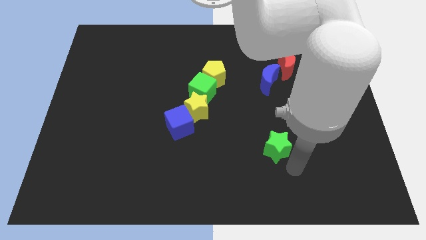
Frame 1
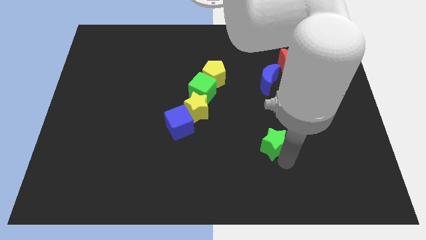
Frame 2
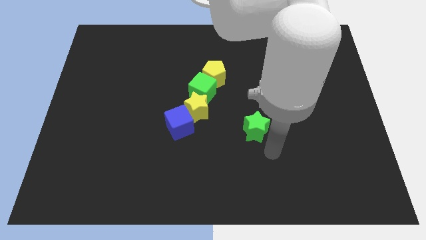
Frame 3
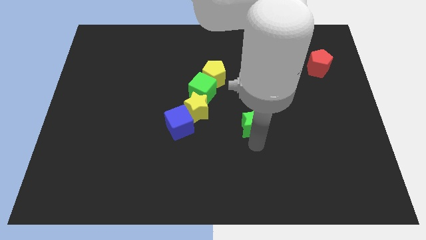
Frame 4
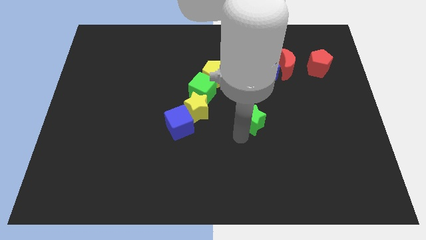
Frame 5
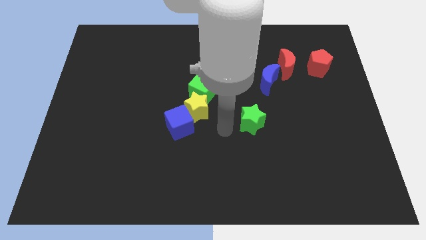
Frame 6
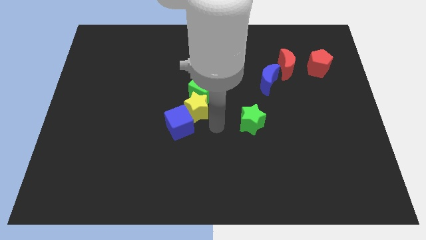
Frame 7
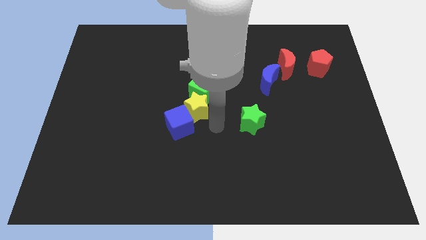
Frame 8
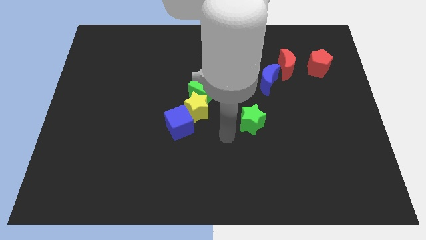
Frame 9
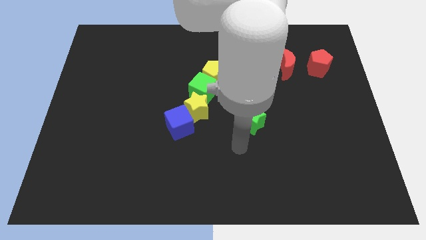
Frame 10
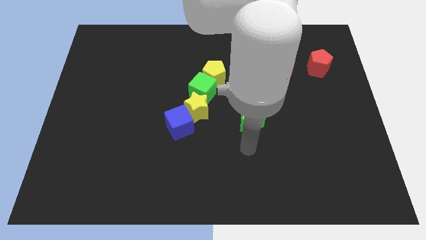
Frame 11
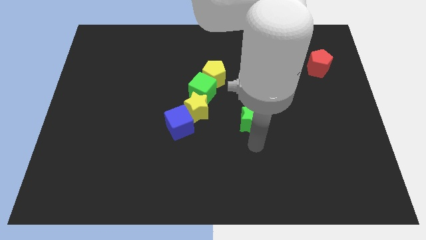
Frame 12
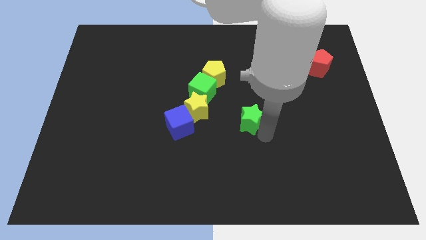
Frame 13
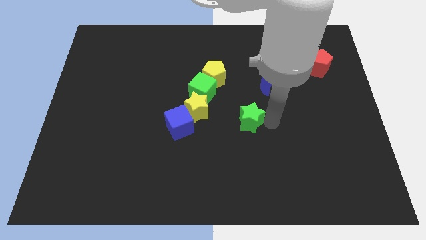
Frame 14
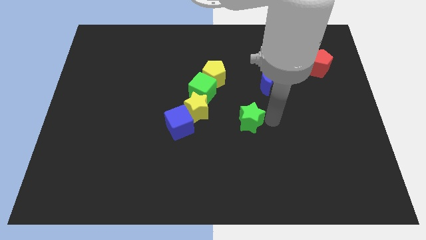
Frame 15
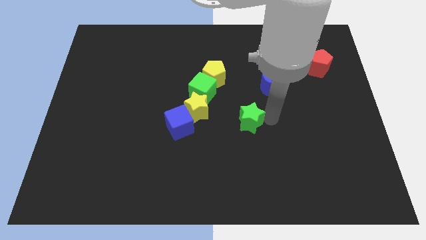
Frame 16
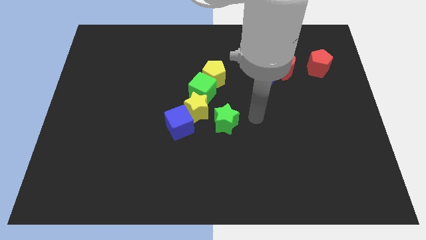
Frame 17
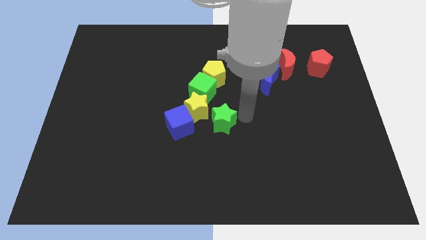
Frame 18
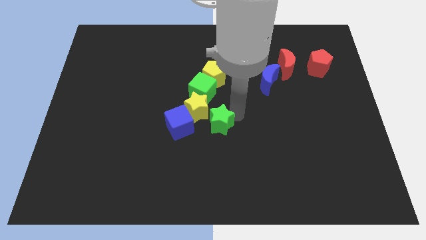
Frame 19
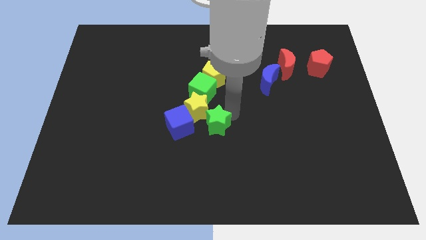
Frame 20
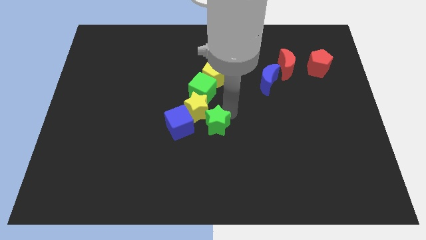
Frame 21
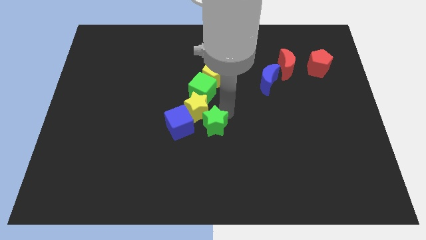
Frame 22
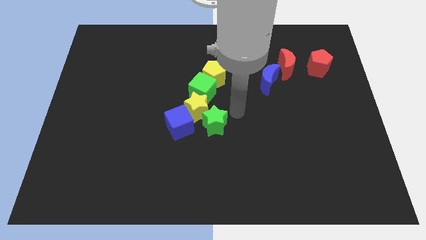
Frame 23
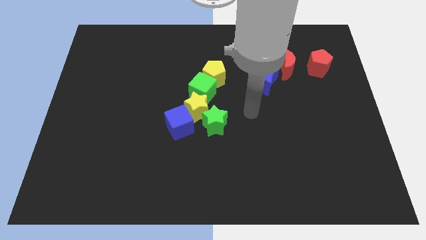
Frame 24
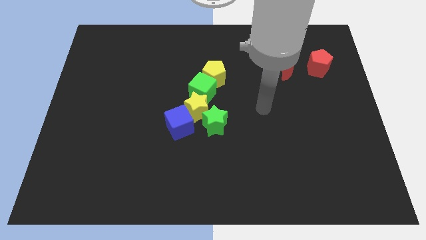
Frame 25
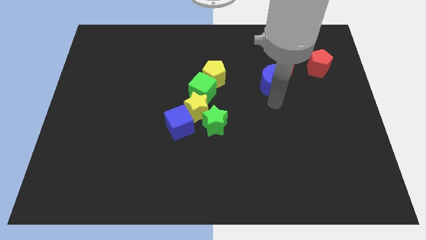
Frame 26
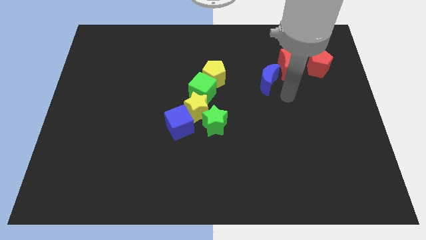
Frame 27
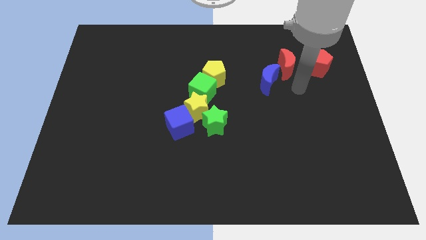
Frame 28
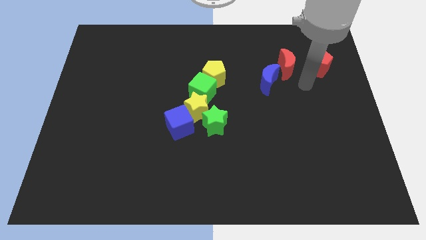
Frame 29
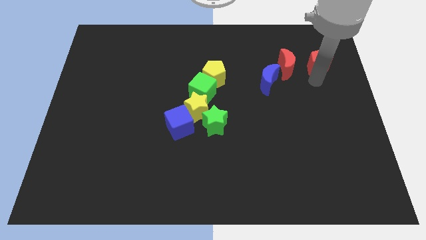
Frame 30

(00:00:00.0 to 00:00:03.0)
place the green star diagonally bottom right to yellow star

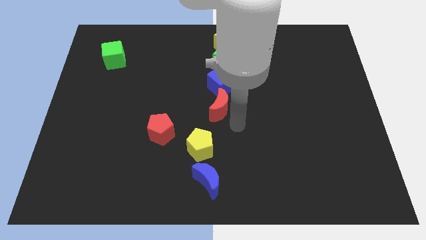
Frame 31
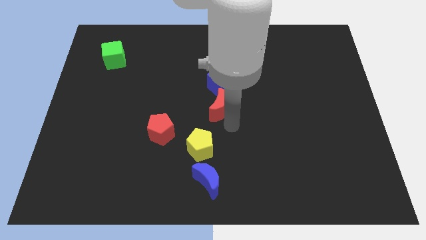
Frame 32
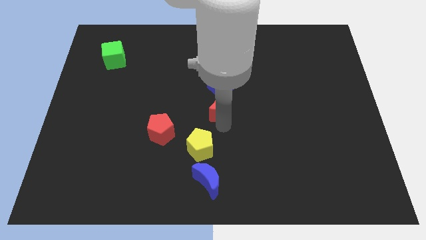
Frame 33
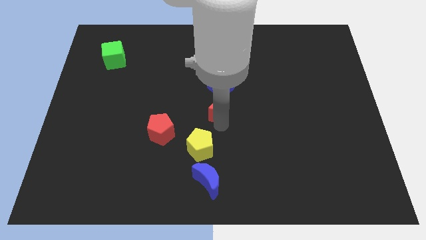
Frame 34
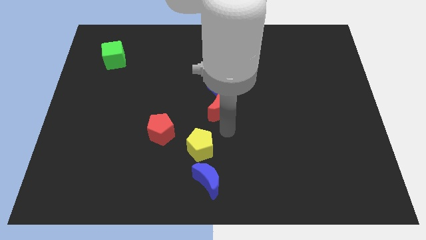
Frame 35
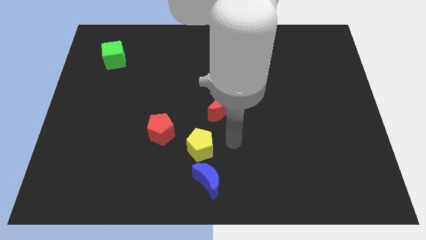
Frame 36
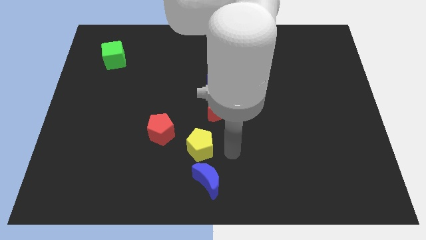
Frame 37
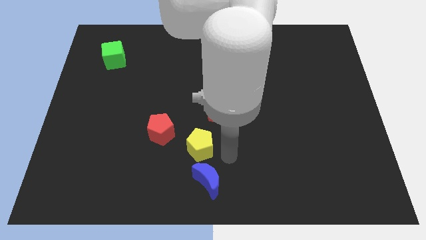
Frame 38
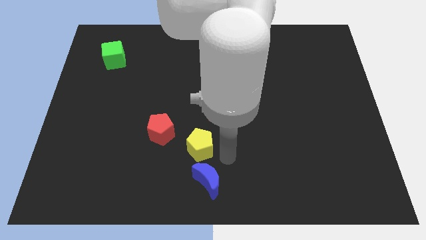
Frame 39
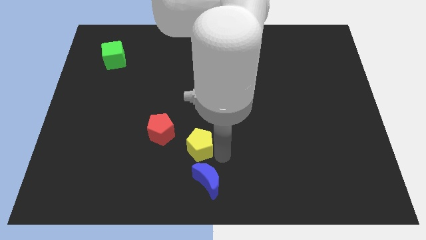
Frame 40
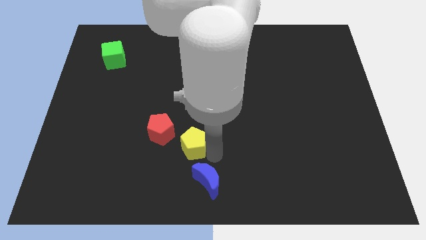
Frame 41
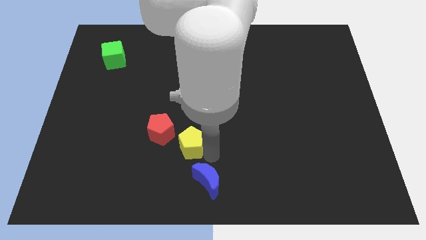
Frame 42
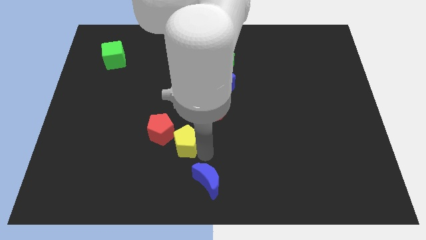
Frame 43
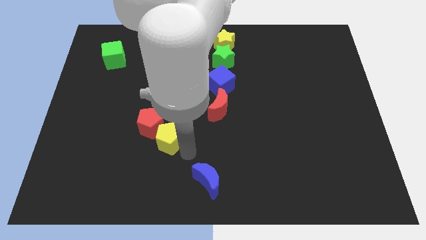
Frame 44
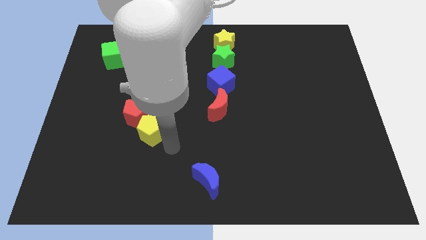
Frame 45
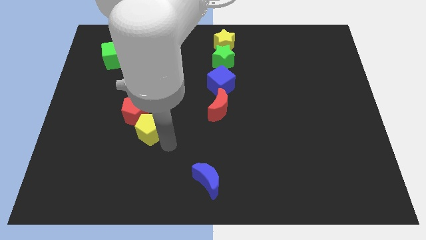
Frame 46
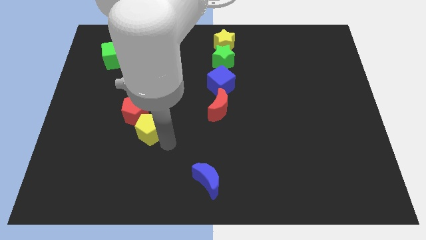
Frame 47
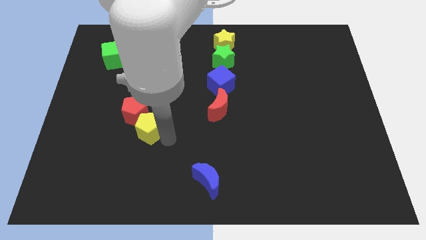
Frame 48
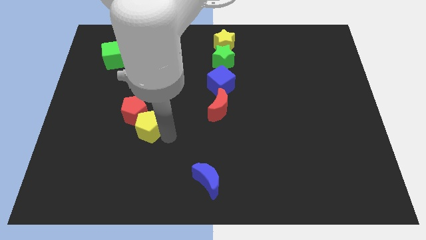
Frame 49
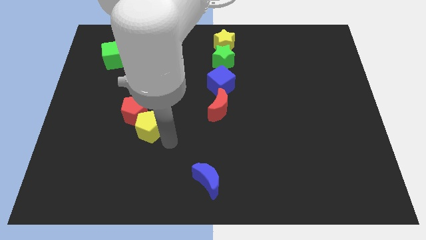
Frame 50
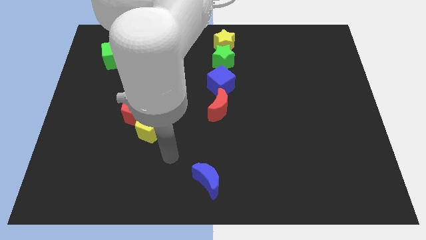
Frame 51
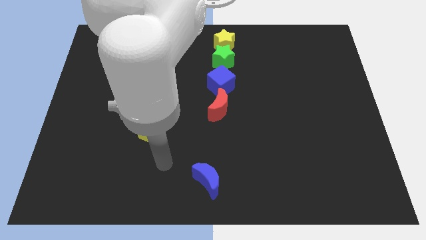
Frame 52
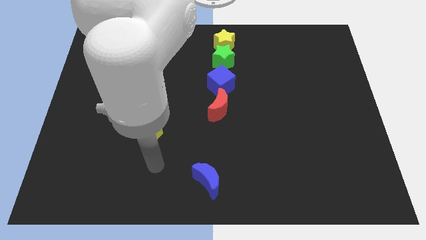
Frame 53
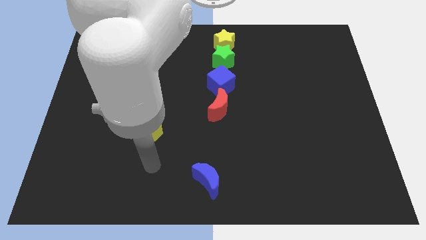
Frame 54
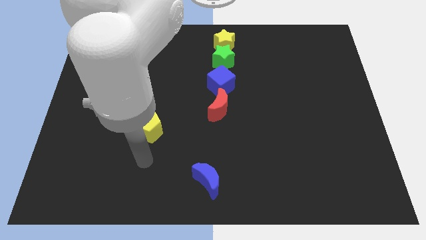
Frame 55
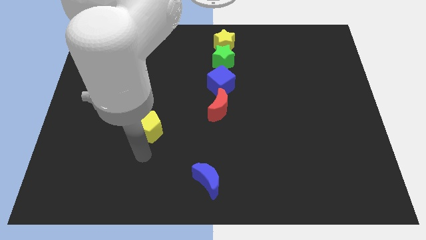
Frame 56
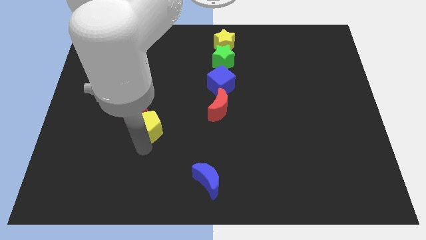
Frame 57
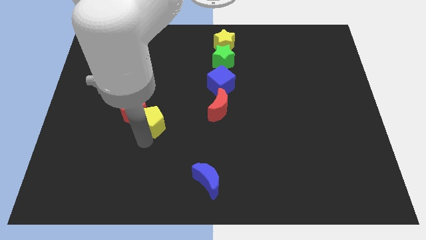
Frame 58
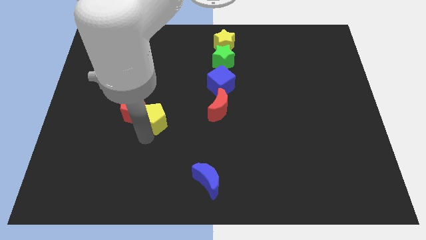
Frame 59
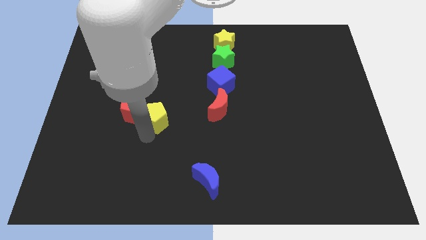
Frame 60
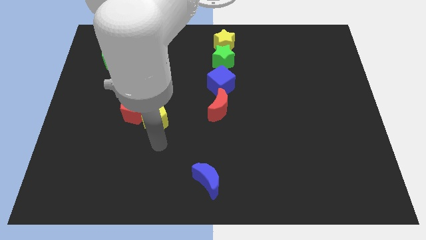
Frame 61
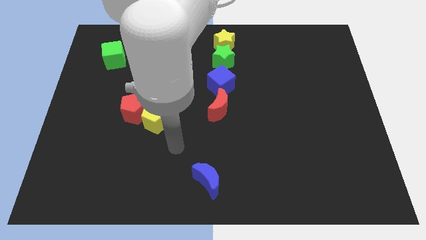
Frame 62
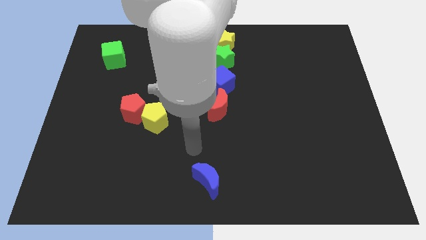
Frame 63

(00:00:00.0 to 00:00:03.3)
move the yellow pentagon away from the top side of the blue moon

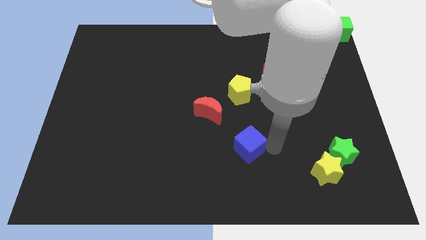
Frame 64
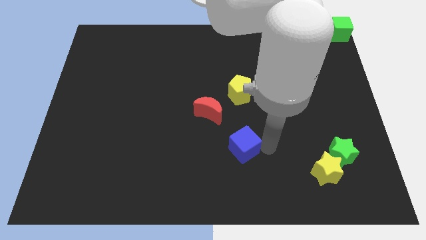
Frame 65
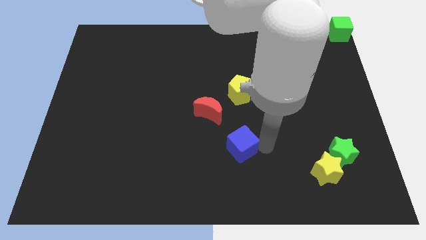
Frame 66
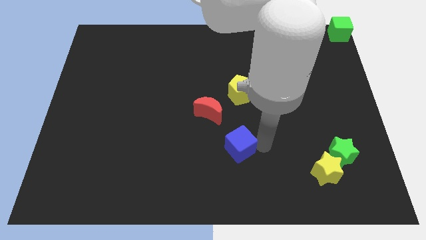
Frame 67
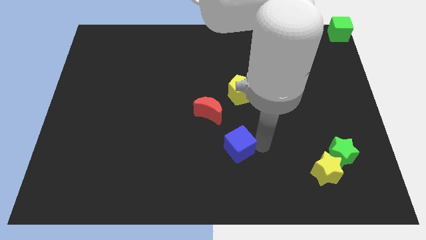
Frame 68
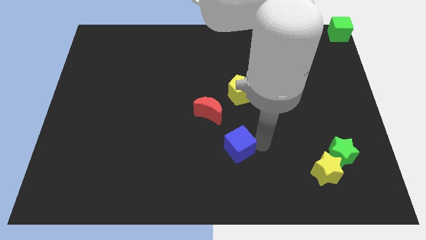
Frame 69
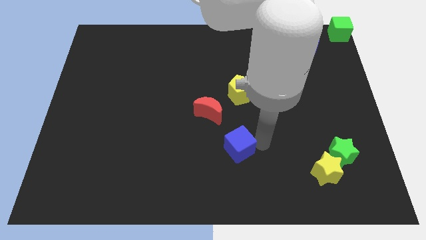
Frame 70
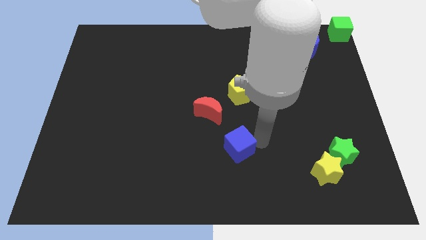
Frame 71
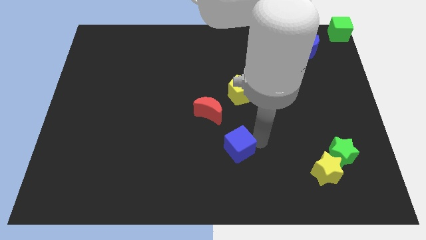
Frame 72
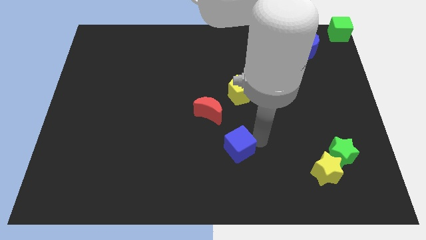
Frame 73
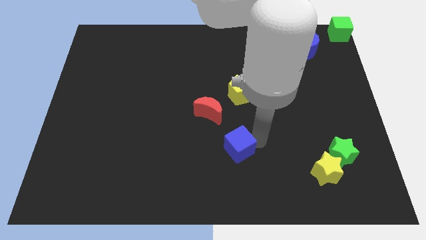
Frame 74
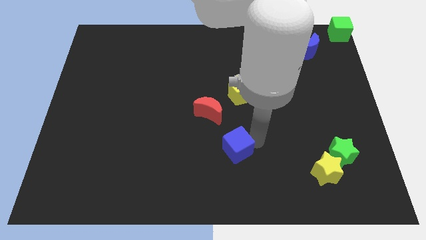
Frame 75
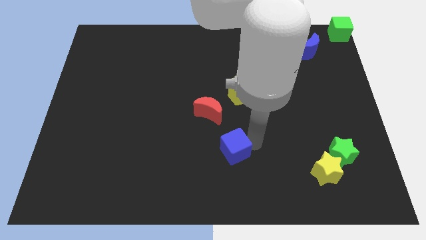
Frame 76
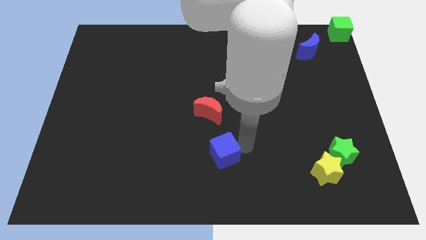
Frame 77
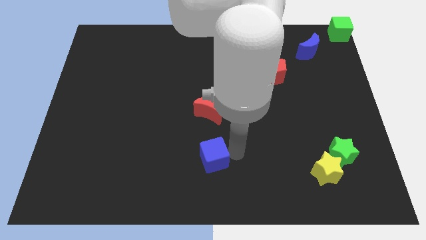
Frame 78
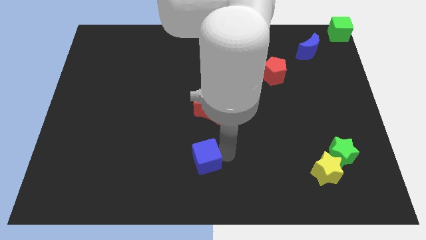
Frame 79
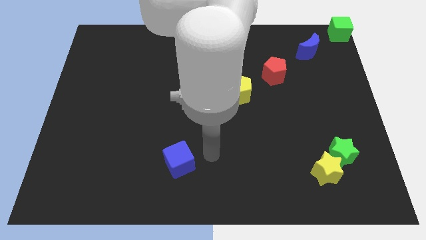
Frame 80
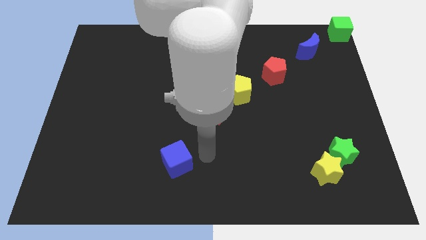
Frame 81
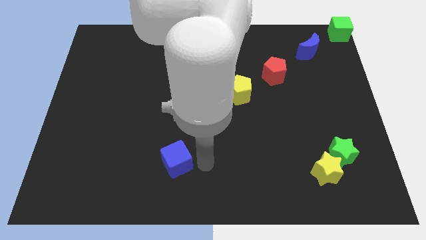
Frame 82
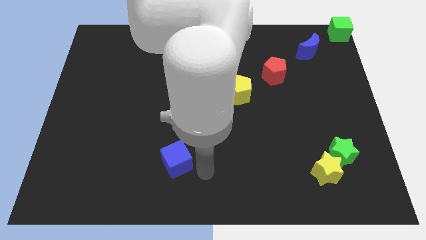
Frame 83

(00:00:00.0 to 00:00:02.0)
push the blue cube to the bottom left

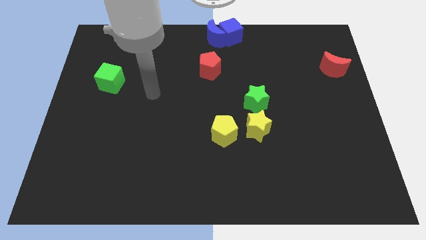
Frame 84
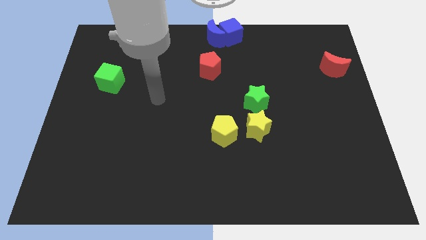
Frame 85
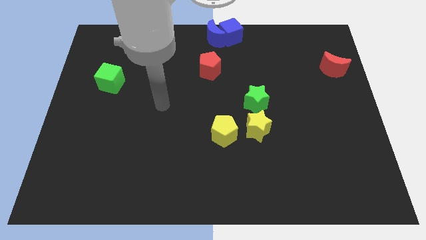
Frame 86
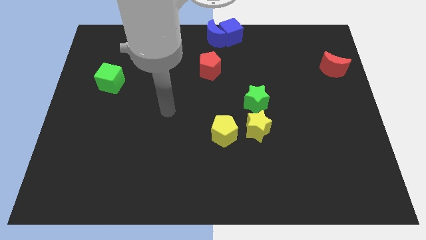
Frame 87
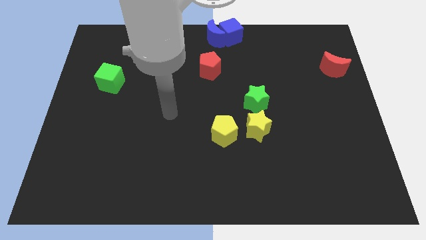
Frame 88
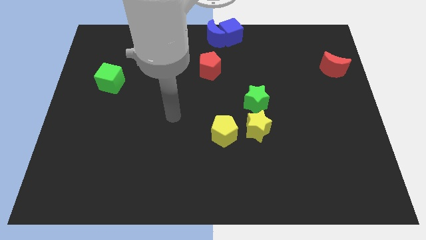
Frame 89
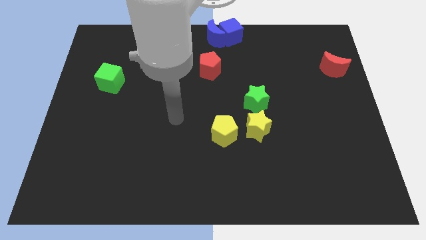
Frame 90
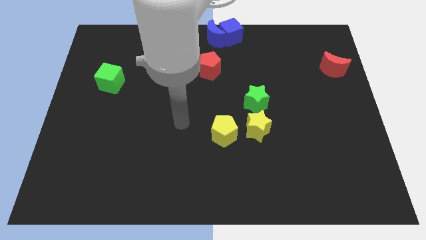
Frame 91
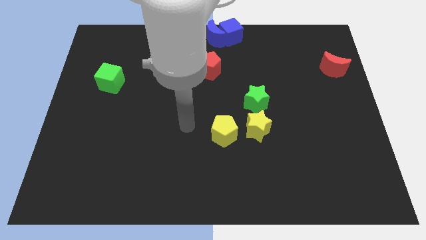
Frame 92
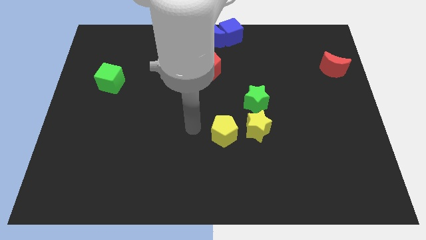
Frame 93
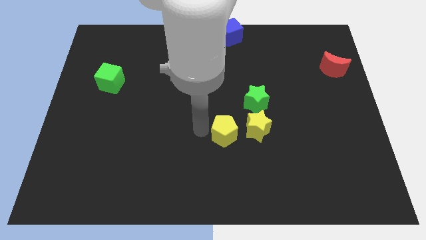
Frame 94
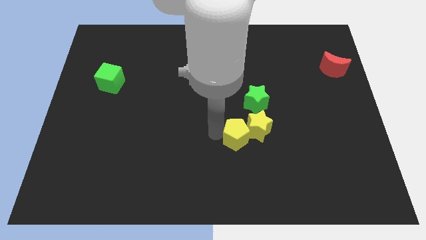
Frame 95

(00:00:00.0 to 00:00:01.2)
go near the yellow pentagon
